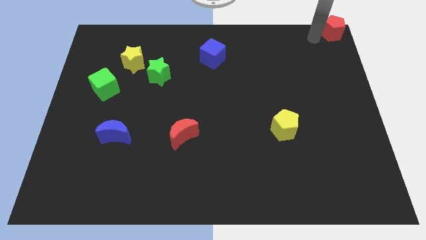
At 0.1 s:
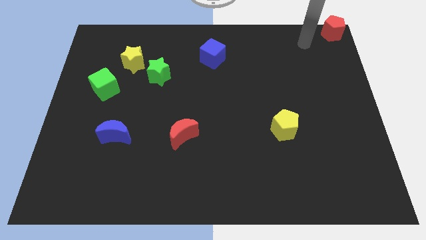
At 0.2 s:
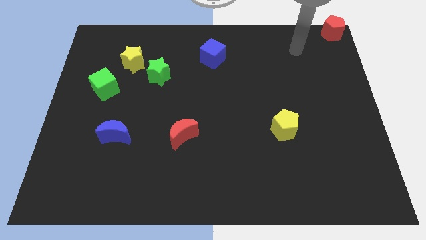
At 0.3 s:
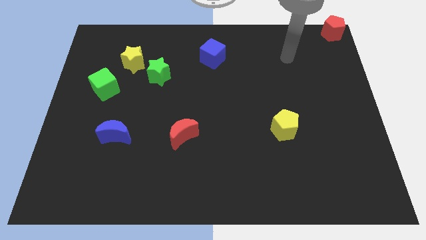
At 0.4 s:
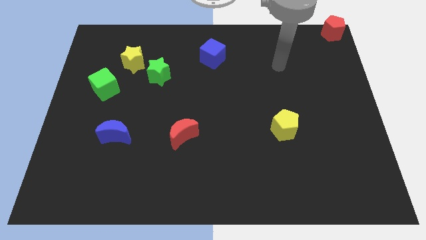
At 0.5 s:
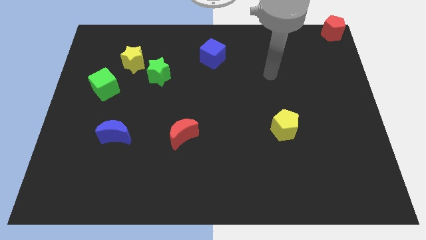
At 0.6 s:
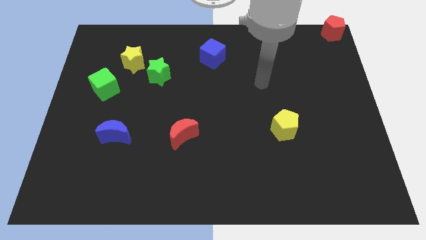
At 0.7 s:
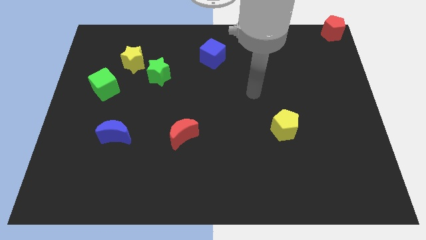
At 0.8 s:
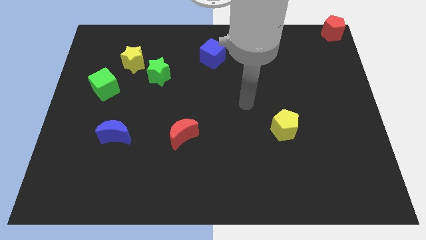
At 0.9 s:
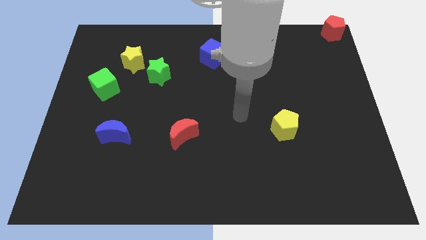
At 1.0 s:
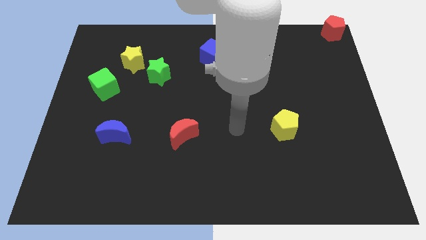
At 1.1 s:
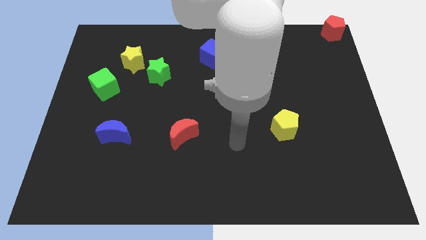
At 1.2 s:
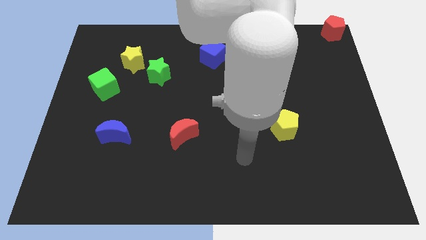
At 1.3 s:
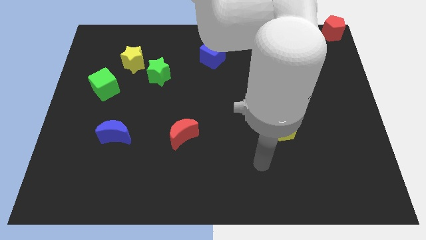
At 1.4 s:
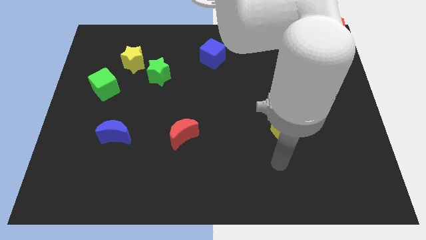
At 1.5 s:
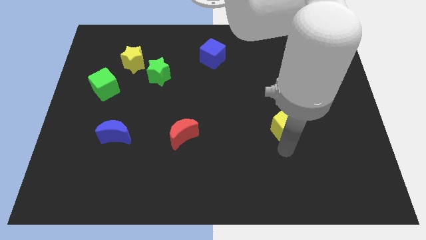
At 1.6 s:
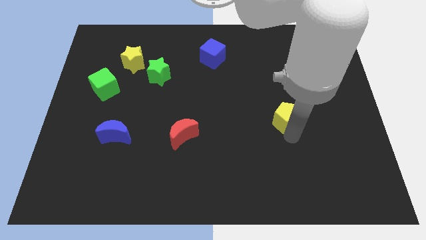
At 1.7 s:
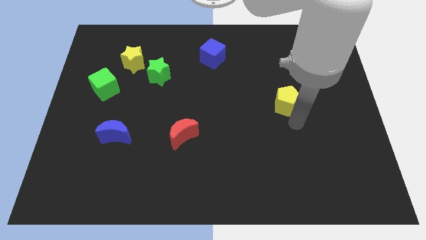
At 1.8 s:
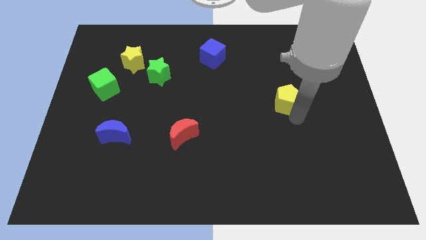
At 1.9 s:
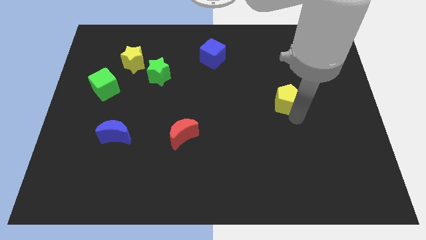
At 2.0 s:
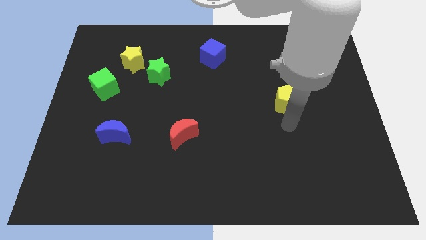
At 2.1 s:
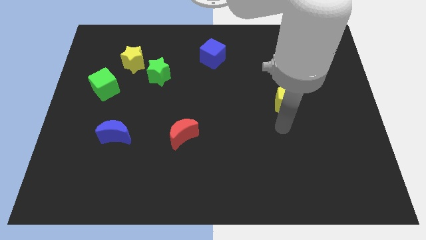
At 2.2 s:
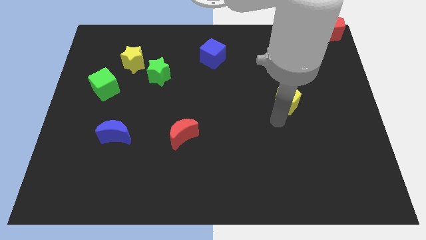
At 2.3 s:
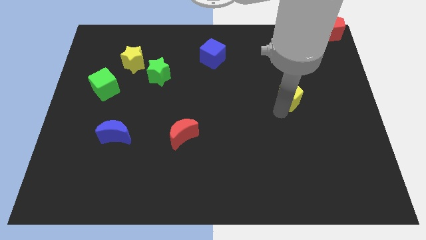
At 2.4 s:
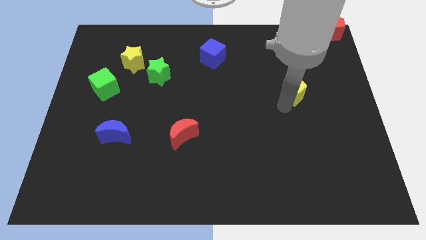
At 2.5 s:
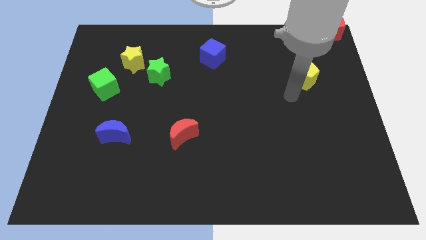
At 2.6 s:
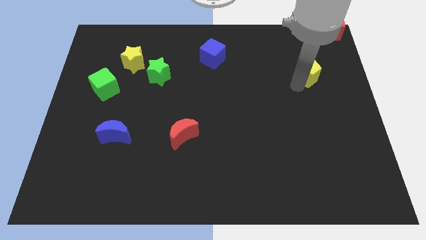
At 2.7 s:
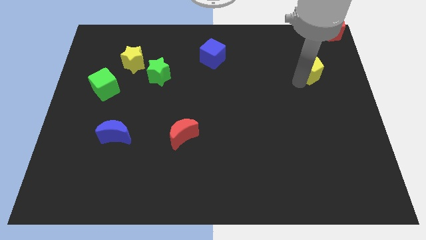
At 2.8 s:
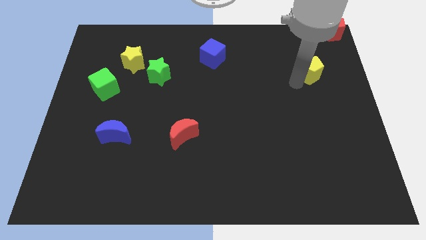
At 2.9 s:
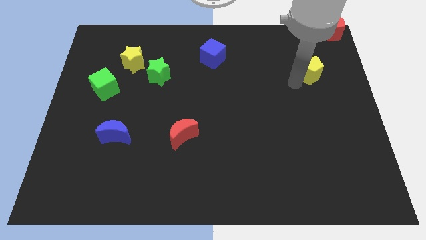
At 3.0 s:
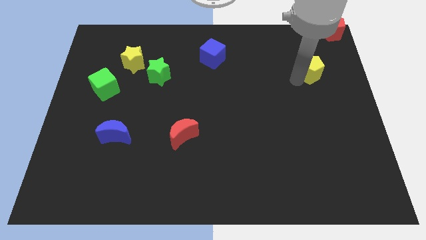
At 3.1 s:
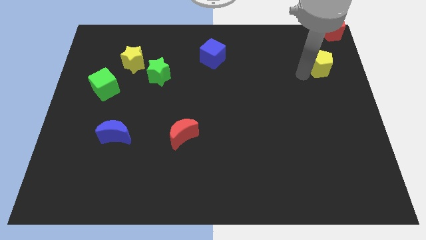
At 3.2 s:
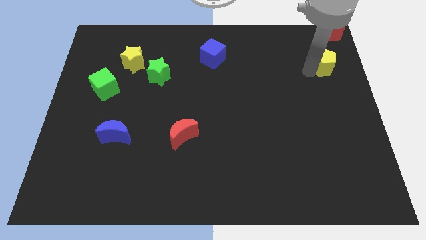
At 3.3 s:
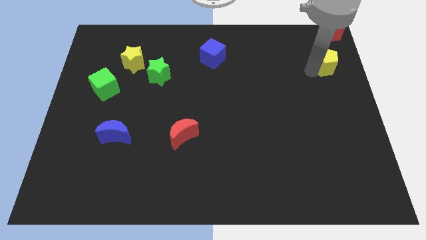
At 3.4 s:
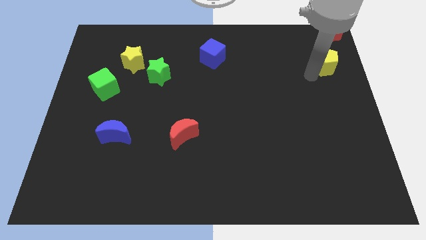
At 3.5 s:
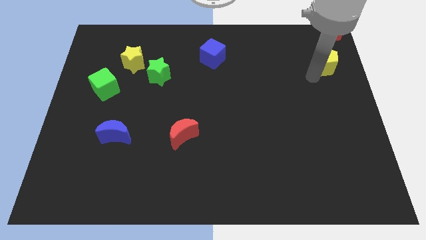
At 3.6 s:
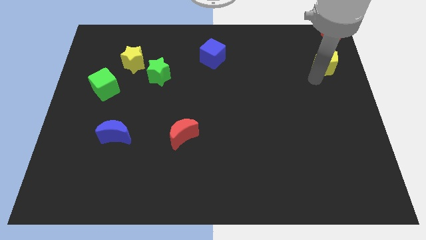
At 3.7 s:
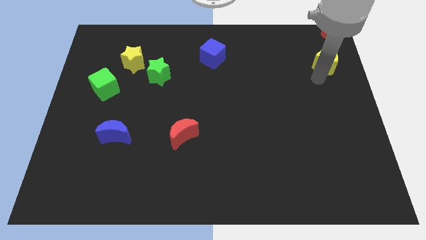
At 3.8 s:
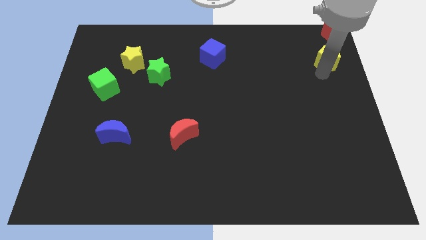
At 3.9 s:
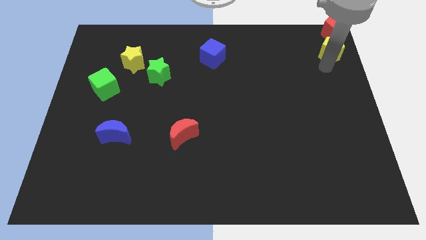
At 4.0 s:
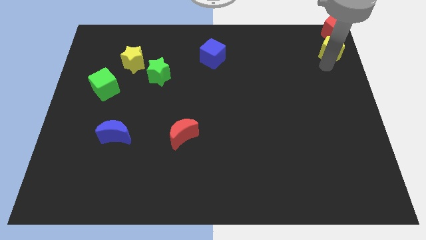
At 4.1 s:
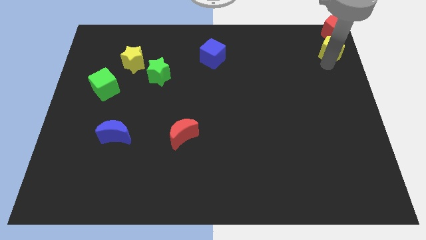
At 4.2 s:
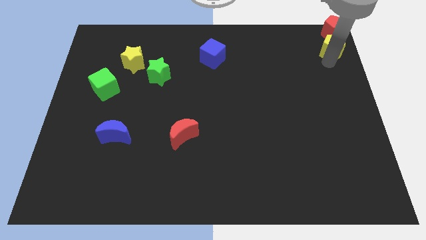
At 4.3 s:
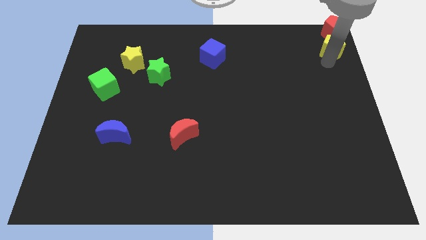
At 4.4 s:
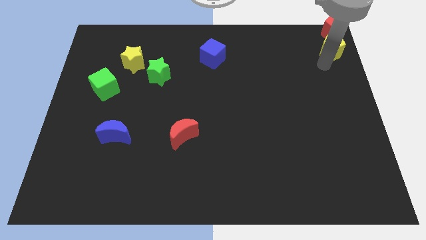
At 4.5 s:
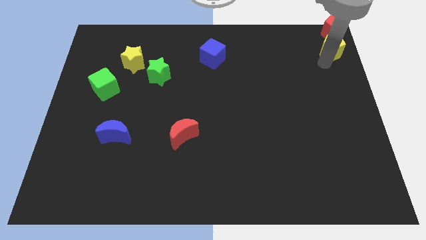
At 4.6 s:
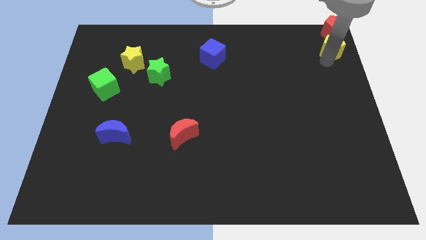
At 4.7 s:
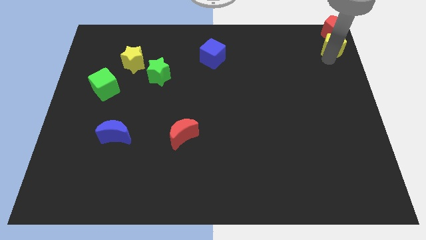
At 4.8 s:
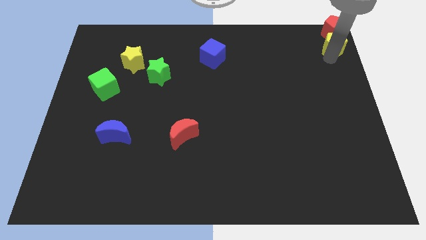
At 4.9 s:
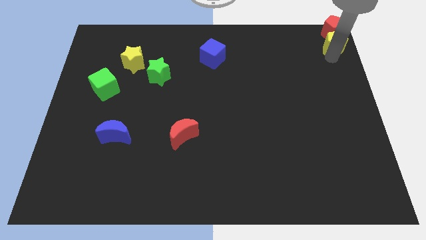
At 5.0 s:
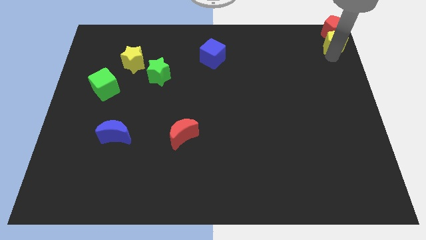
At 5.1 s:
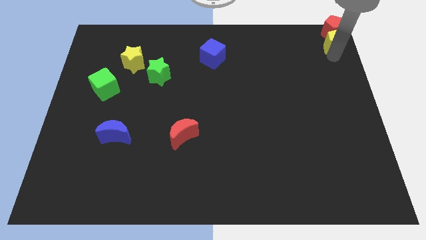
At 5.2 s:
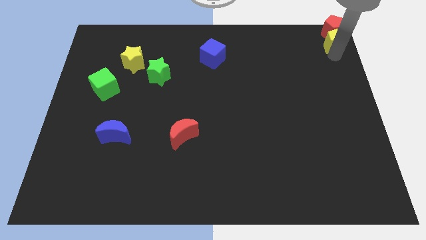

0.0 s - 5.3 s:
slide the yellow pentagon into the bottom side of the red pentagon

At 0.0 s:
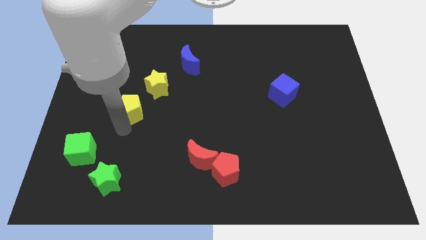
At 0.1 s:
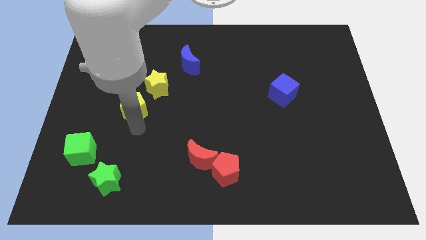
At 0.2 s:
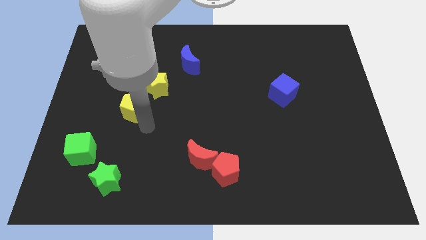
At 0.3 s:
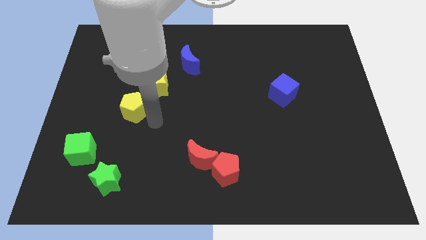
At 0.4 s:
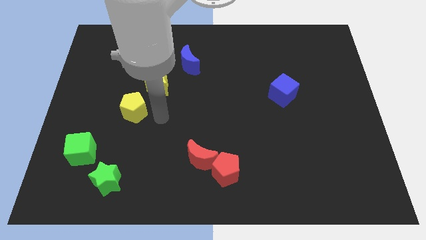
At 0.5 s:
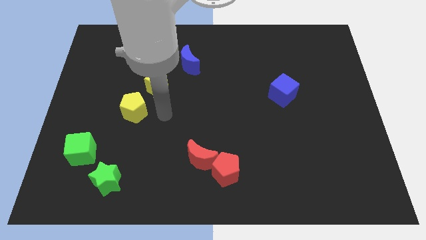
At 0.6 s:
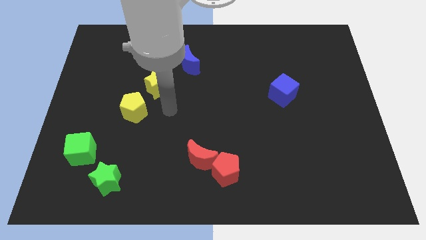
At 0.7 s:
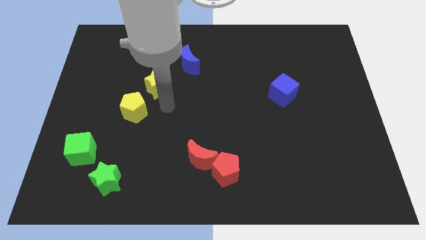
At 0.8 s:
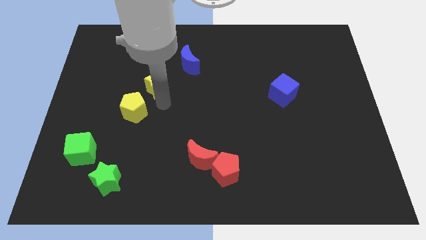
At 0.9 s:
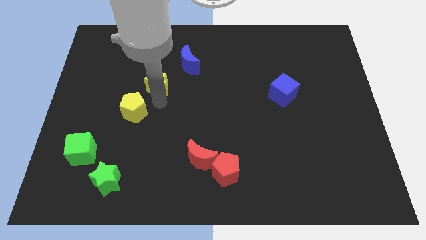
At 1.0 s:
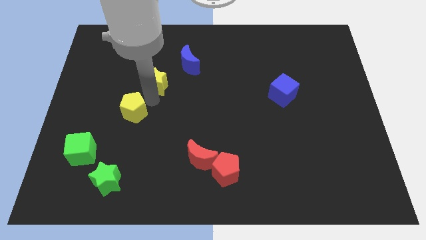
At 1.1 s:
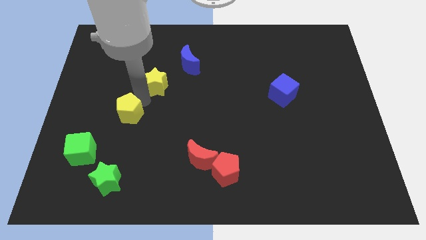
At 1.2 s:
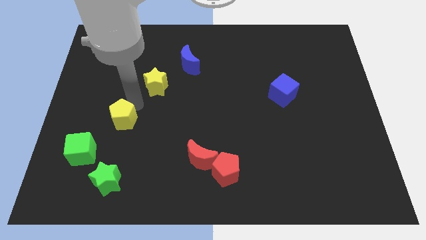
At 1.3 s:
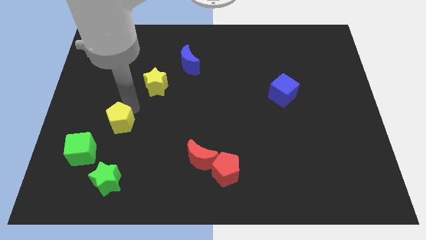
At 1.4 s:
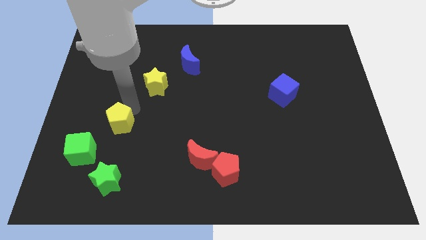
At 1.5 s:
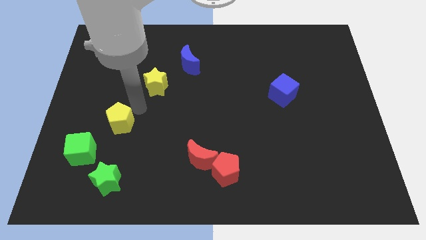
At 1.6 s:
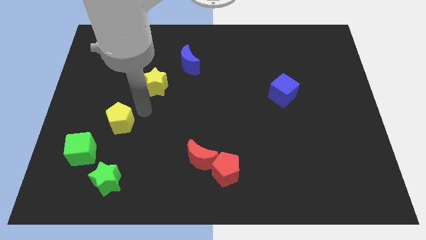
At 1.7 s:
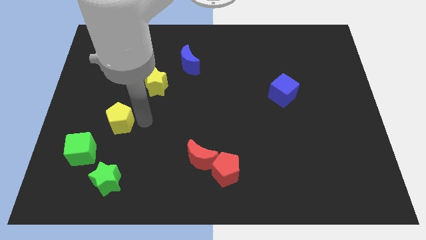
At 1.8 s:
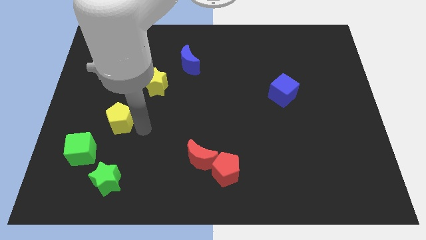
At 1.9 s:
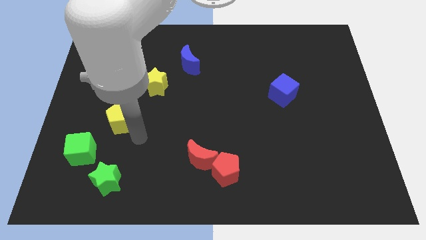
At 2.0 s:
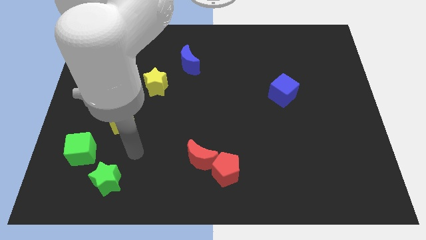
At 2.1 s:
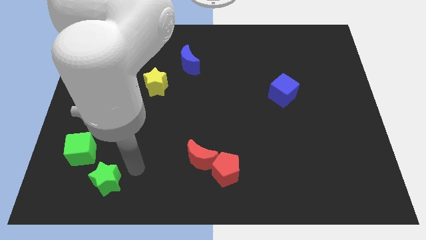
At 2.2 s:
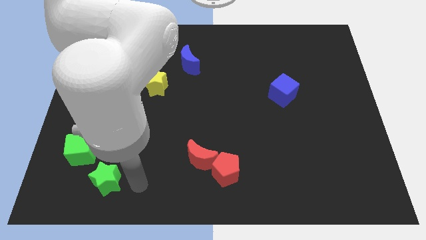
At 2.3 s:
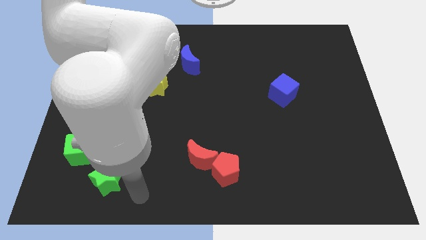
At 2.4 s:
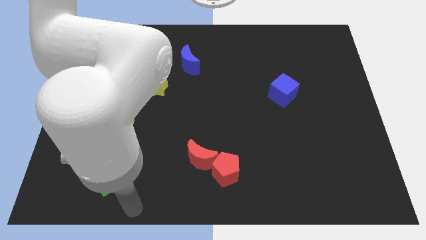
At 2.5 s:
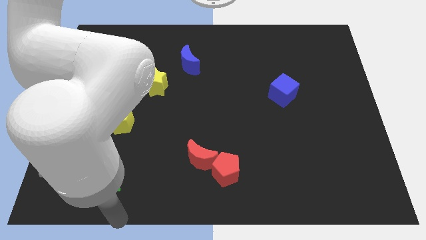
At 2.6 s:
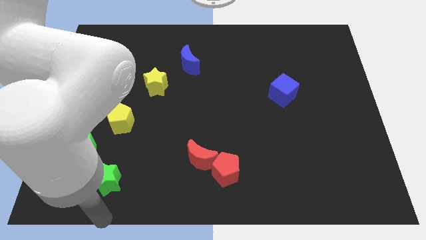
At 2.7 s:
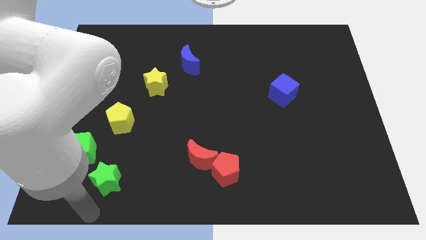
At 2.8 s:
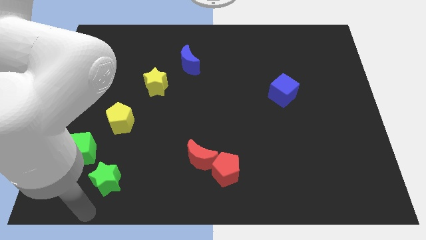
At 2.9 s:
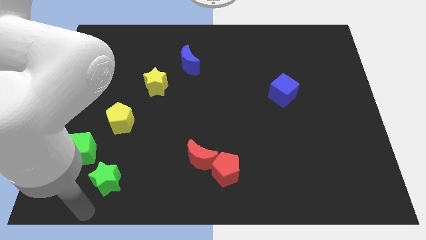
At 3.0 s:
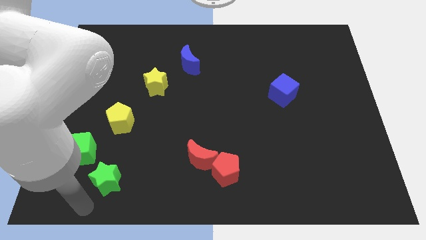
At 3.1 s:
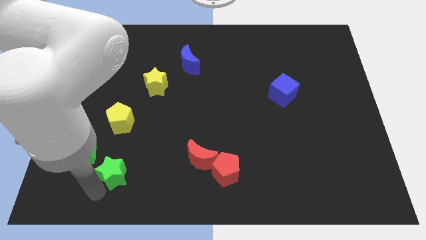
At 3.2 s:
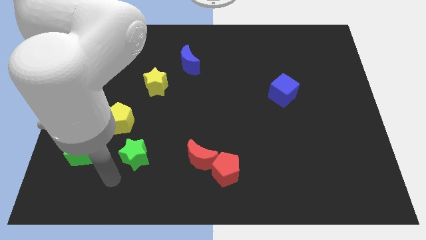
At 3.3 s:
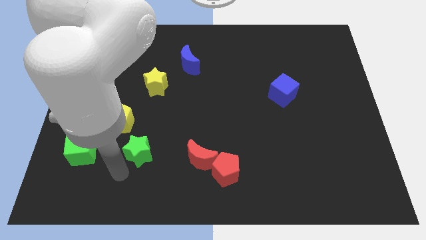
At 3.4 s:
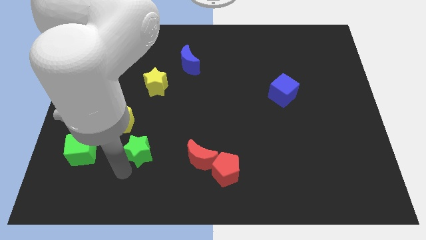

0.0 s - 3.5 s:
move the yellow pentagon diagonal to the green cube
